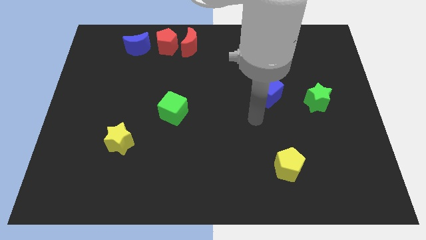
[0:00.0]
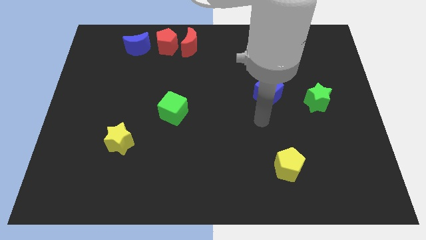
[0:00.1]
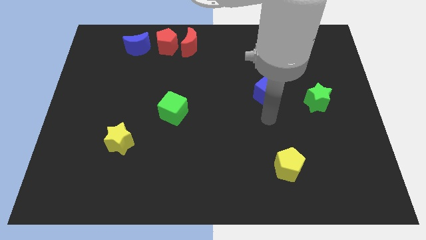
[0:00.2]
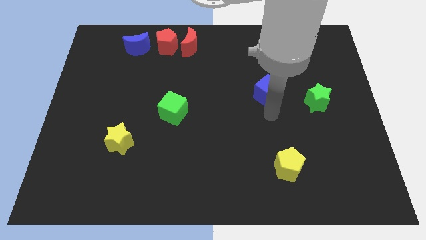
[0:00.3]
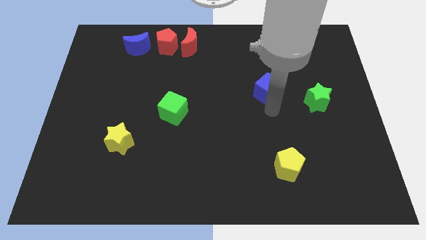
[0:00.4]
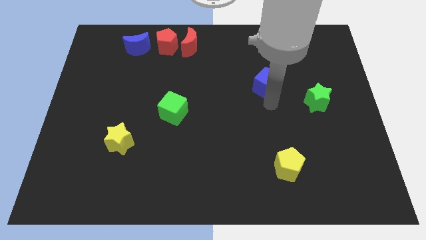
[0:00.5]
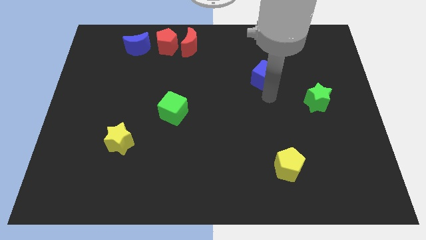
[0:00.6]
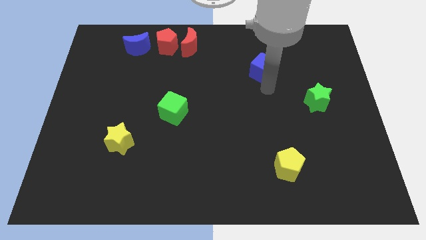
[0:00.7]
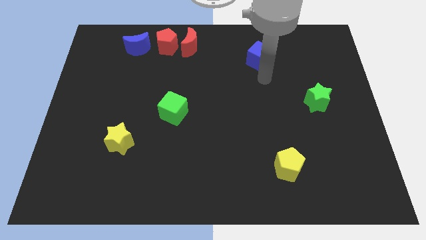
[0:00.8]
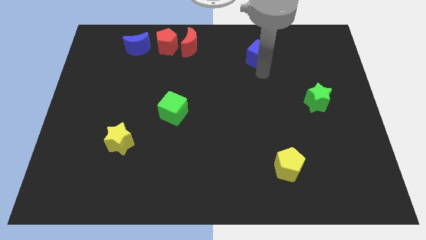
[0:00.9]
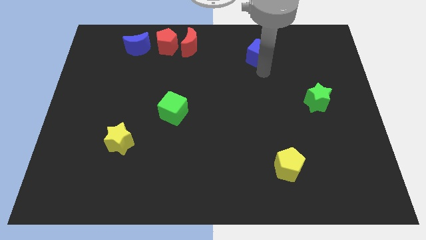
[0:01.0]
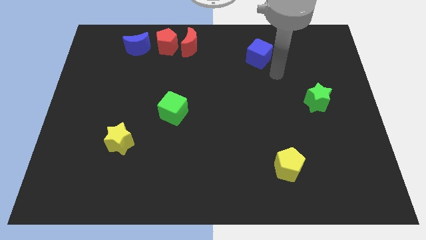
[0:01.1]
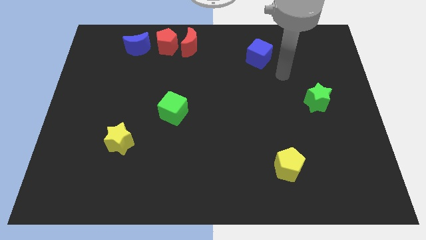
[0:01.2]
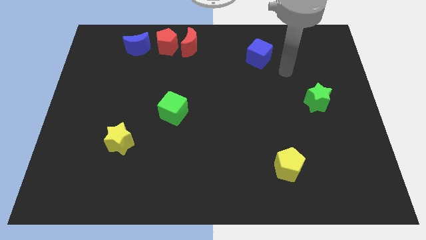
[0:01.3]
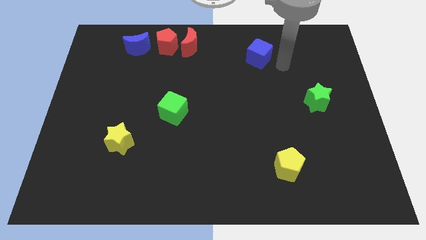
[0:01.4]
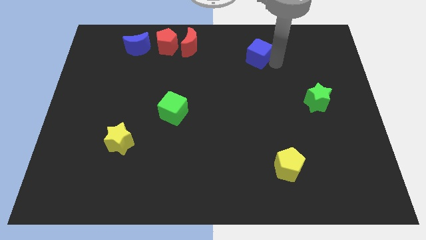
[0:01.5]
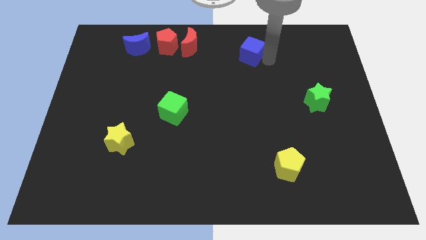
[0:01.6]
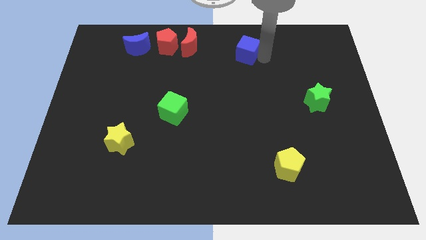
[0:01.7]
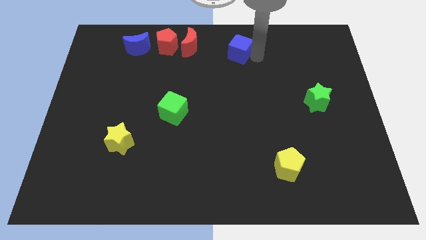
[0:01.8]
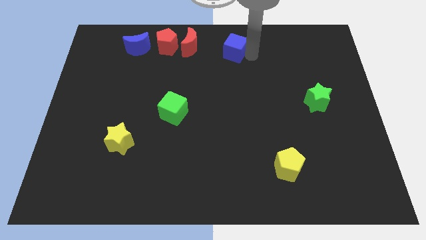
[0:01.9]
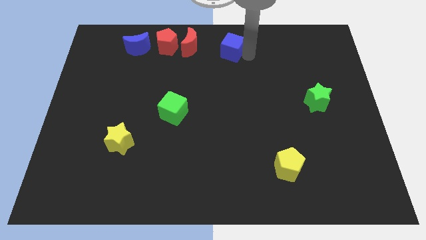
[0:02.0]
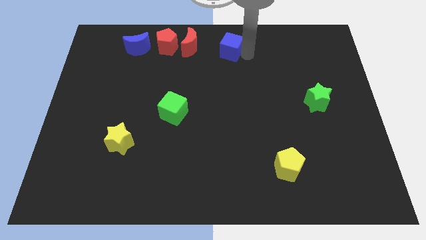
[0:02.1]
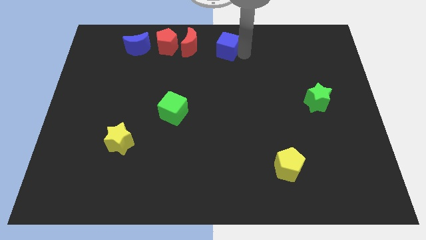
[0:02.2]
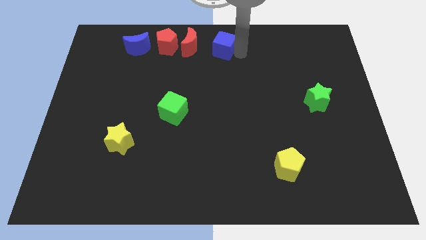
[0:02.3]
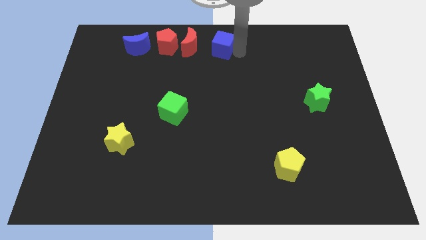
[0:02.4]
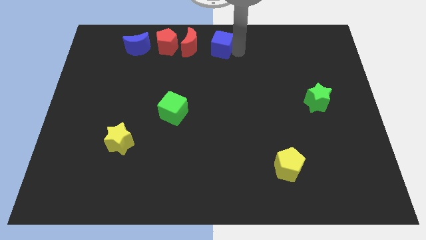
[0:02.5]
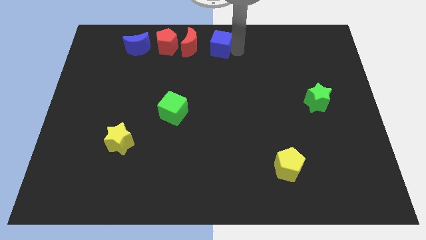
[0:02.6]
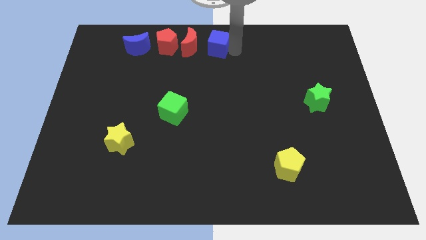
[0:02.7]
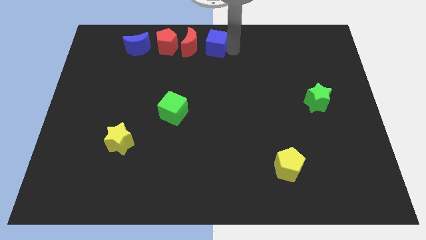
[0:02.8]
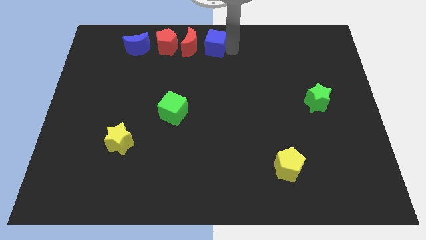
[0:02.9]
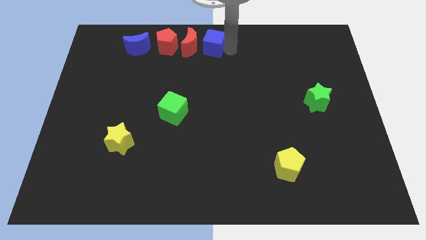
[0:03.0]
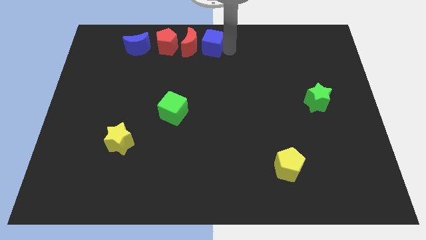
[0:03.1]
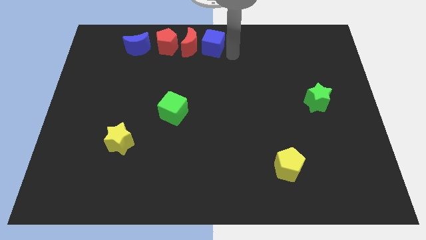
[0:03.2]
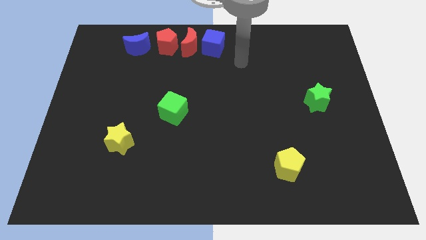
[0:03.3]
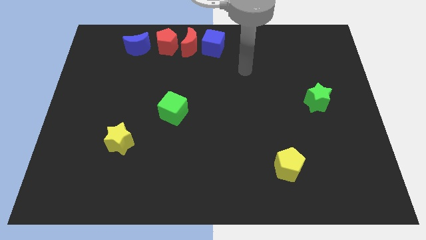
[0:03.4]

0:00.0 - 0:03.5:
place blue cube to the right of red crescent

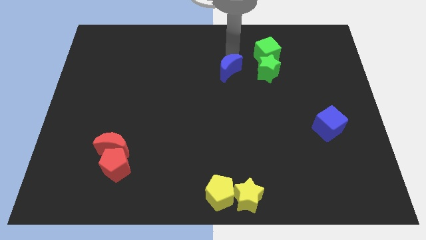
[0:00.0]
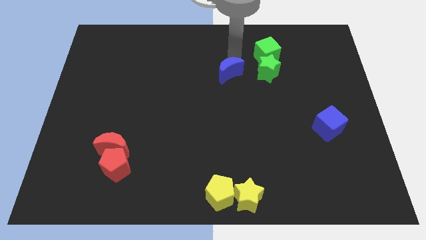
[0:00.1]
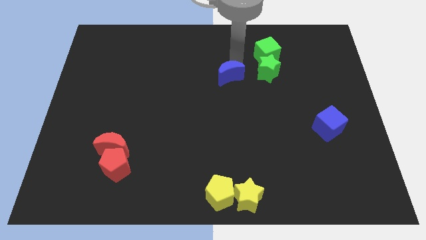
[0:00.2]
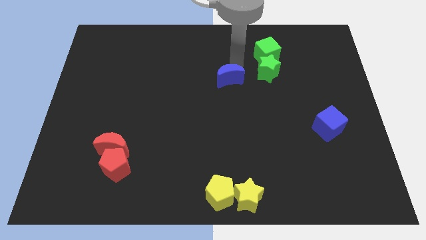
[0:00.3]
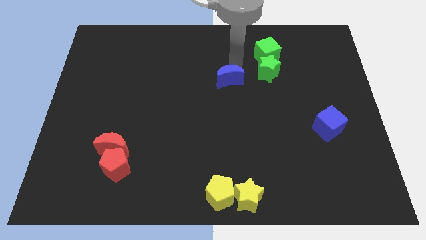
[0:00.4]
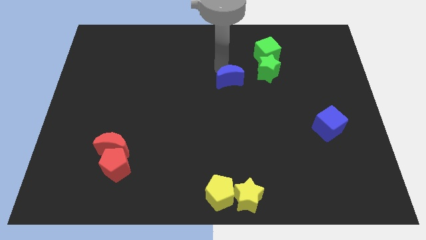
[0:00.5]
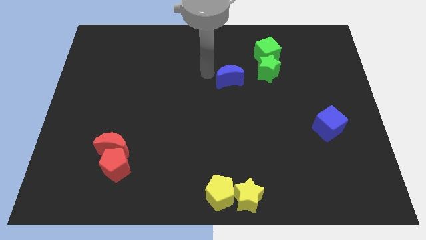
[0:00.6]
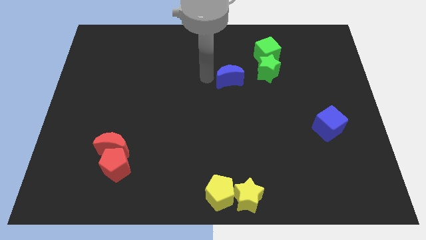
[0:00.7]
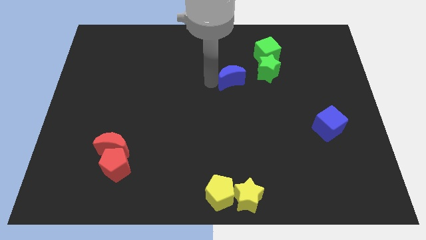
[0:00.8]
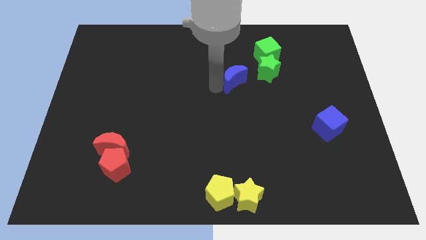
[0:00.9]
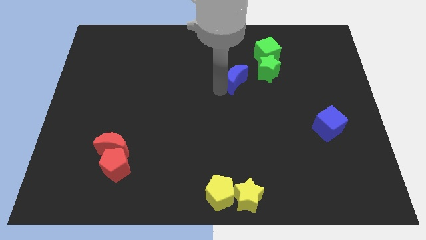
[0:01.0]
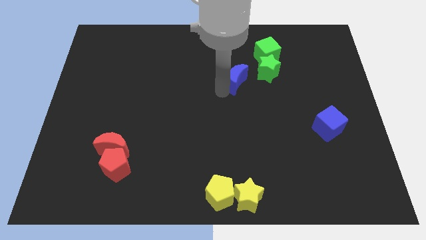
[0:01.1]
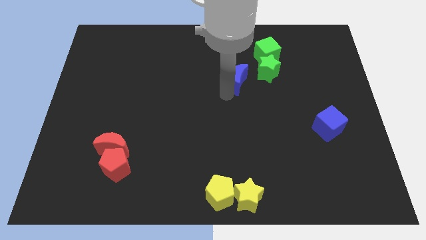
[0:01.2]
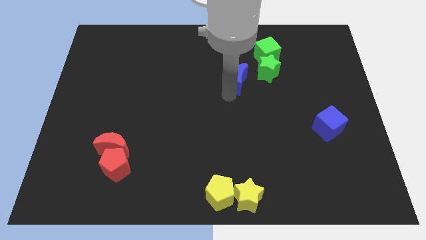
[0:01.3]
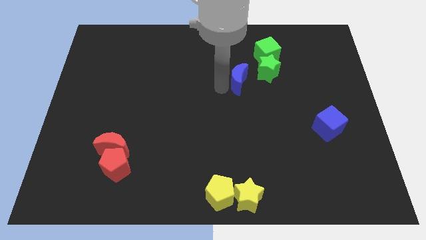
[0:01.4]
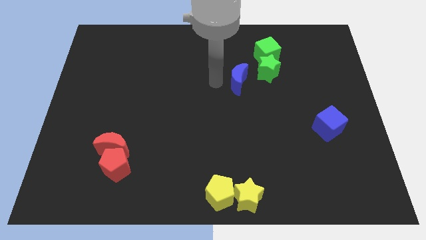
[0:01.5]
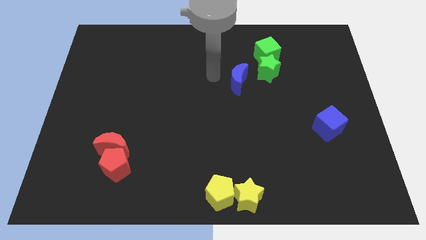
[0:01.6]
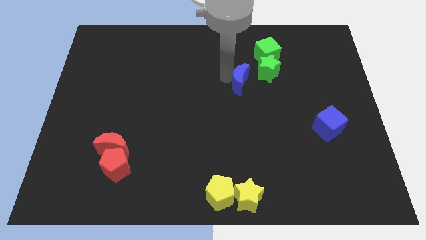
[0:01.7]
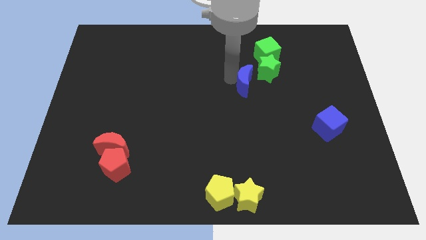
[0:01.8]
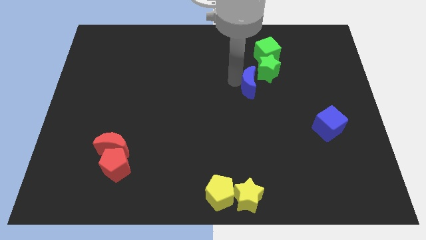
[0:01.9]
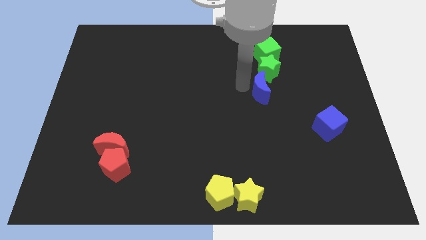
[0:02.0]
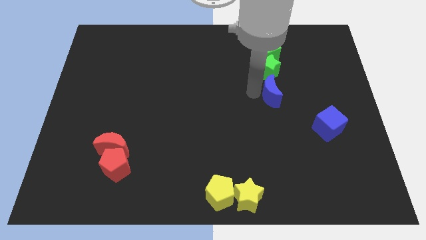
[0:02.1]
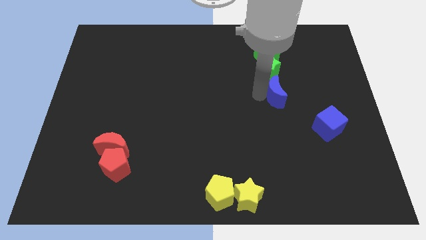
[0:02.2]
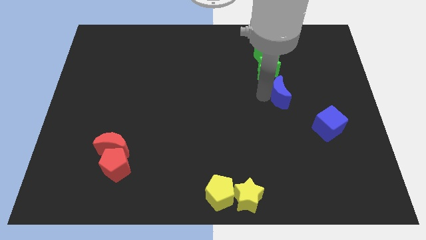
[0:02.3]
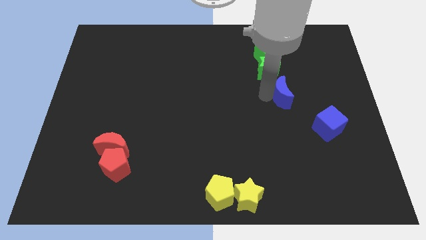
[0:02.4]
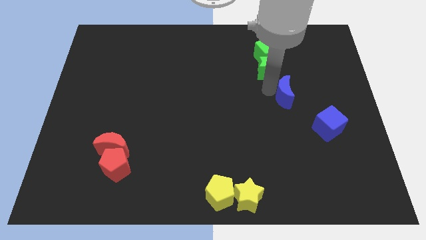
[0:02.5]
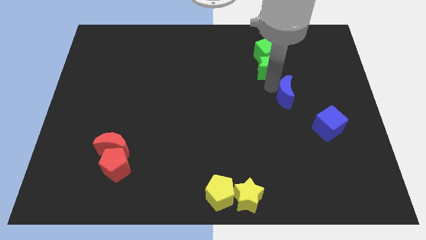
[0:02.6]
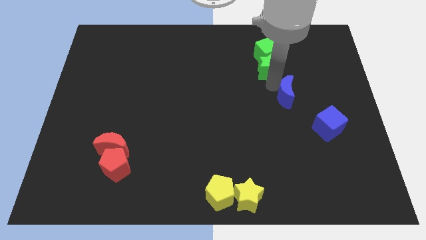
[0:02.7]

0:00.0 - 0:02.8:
place the blue crescent in between blue cube and green star

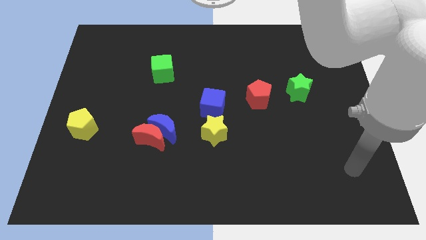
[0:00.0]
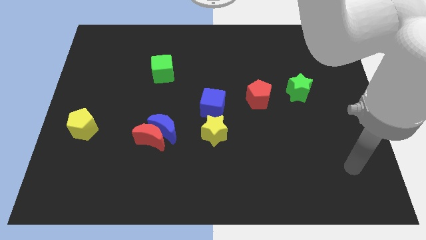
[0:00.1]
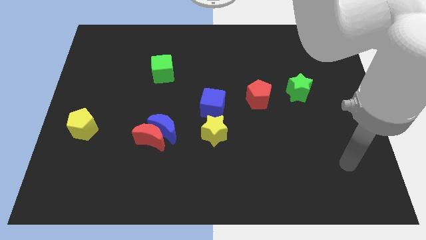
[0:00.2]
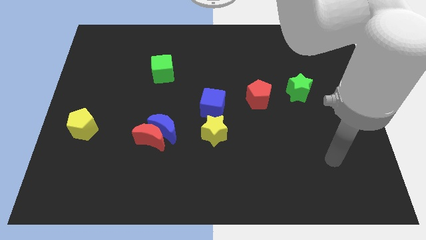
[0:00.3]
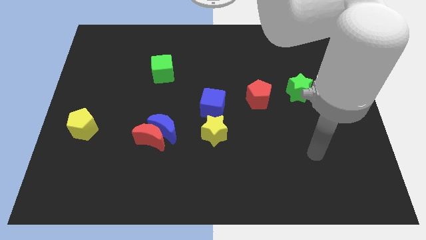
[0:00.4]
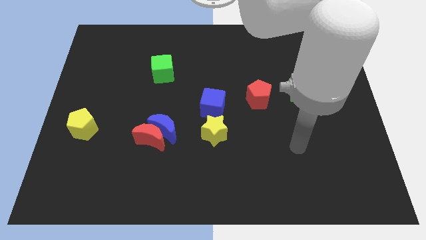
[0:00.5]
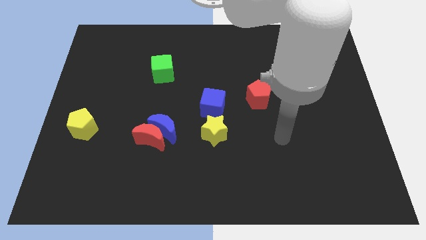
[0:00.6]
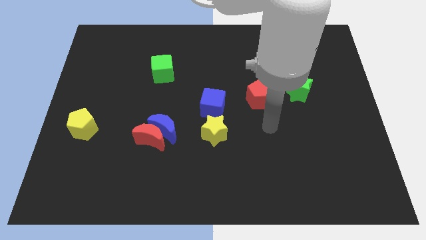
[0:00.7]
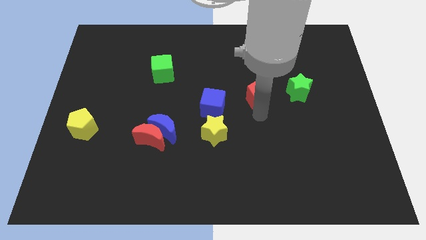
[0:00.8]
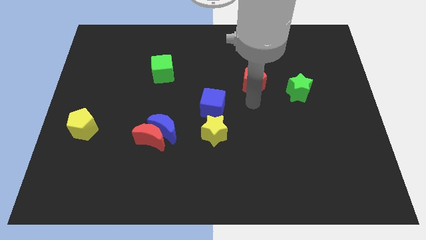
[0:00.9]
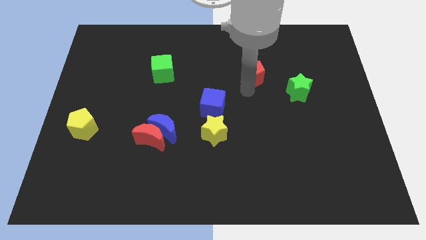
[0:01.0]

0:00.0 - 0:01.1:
push the red pentagon slightly to the top side of the board

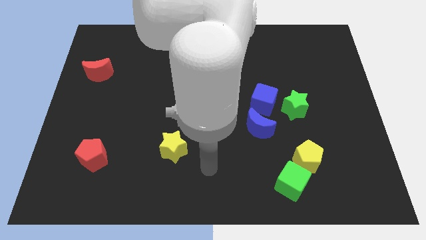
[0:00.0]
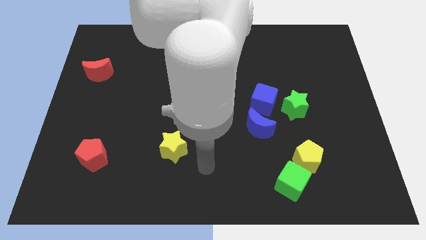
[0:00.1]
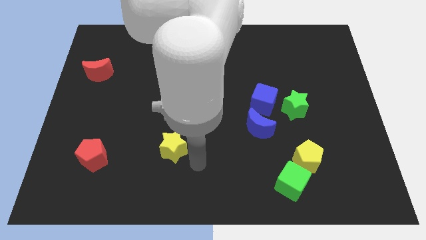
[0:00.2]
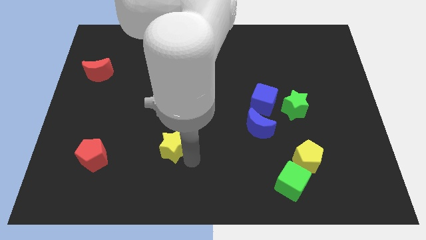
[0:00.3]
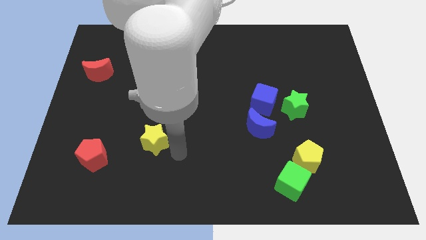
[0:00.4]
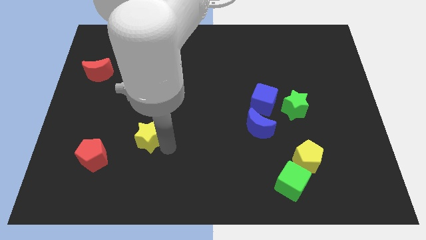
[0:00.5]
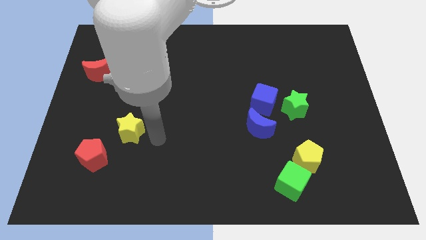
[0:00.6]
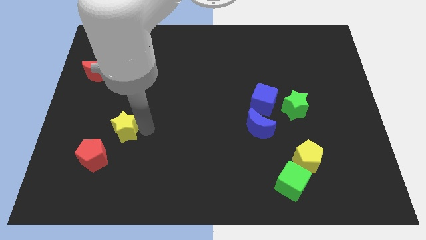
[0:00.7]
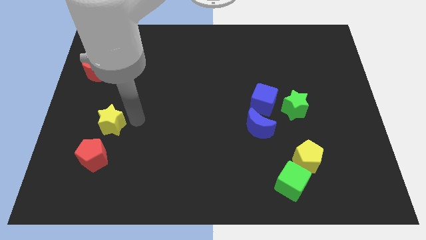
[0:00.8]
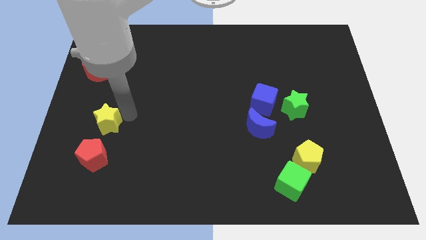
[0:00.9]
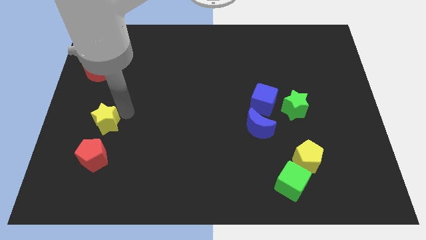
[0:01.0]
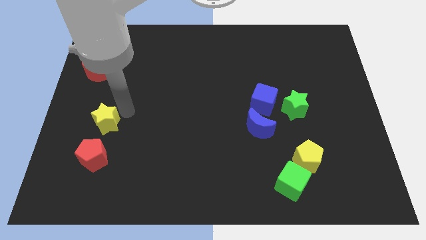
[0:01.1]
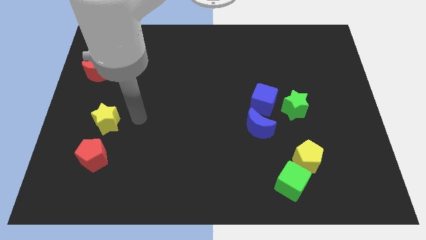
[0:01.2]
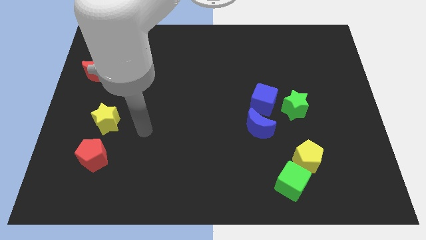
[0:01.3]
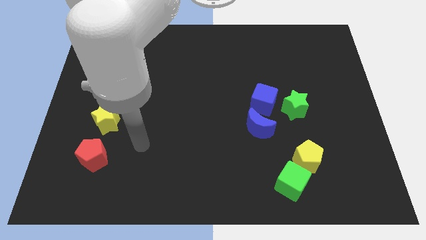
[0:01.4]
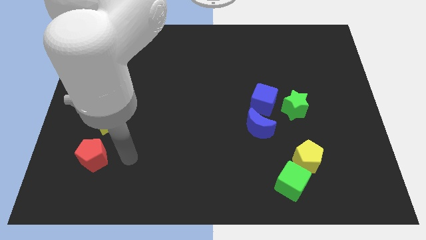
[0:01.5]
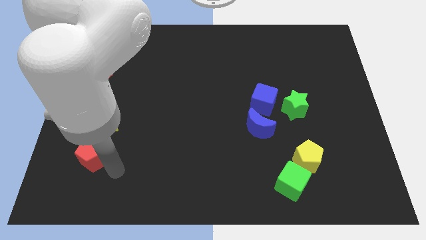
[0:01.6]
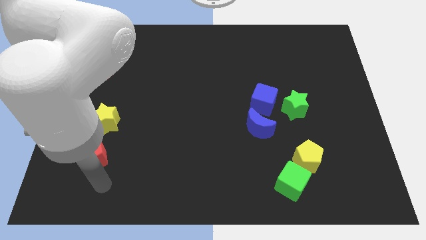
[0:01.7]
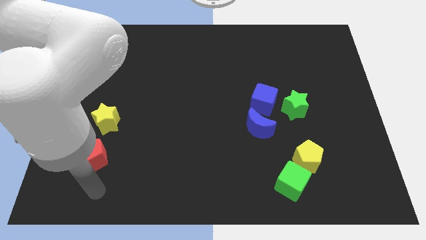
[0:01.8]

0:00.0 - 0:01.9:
push the yellow star above the red pentagon
